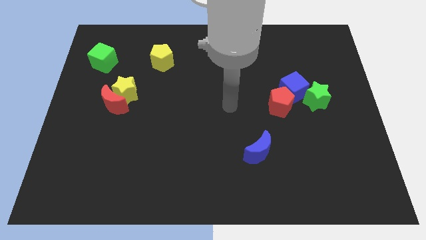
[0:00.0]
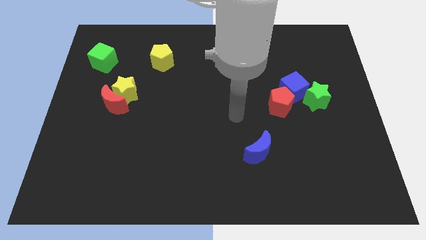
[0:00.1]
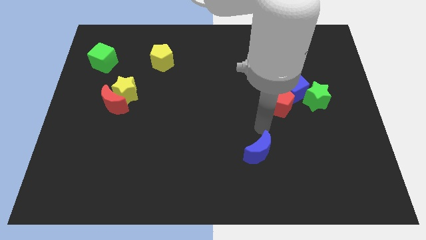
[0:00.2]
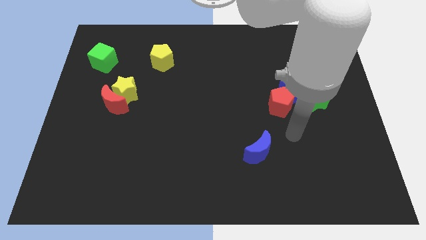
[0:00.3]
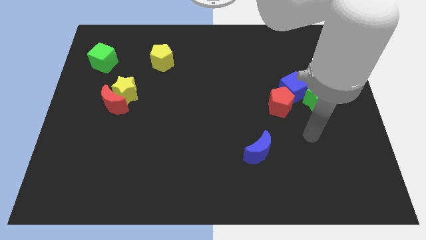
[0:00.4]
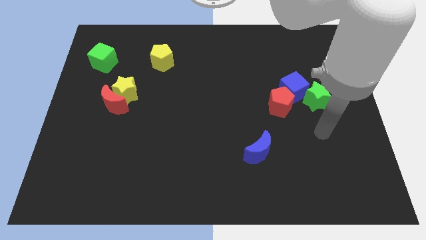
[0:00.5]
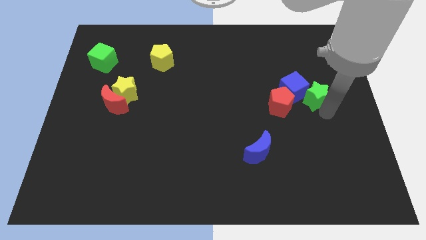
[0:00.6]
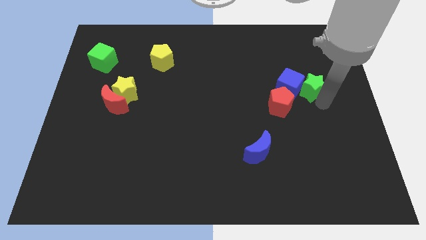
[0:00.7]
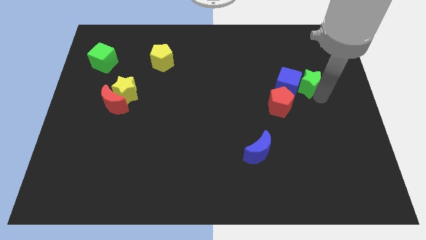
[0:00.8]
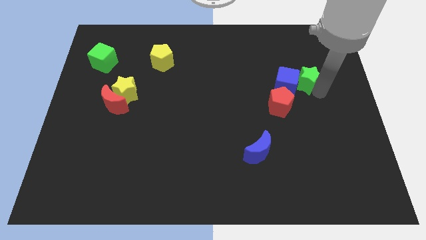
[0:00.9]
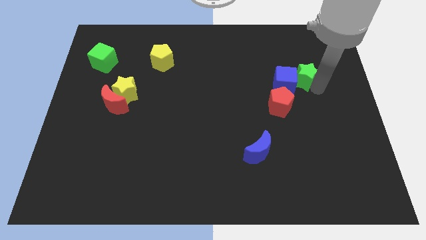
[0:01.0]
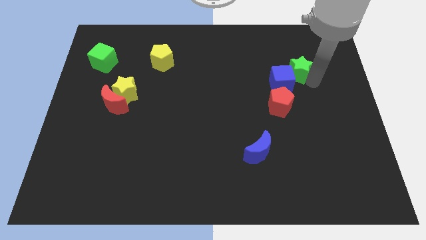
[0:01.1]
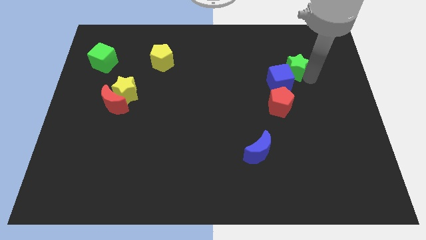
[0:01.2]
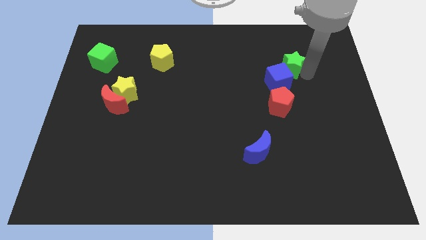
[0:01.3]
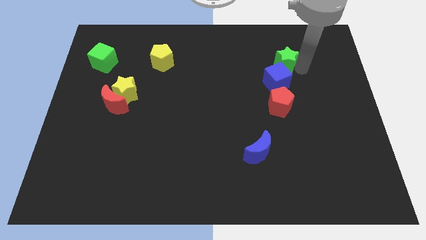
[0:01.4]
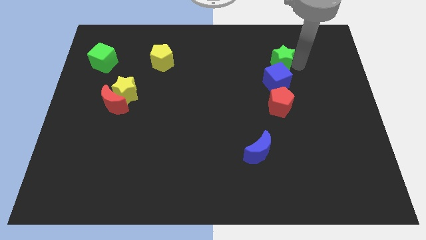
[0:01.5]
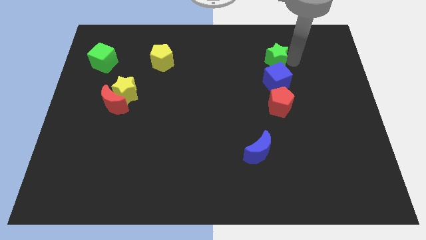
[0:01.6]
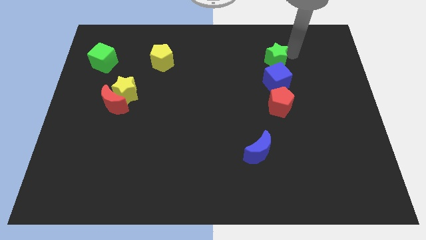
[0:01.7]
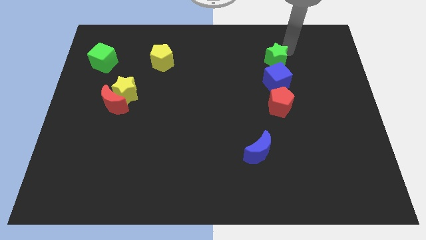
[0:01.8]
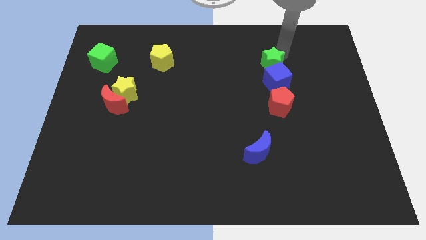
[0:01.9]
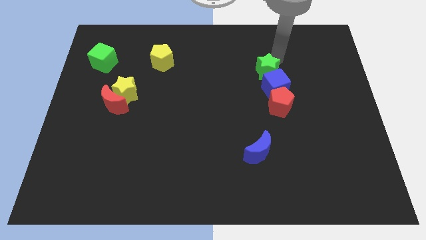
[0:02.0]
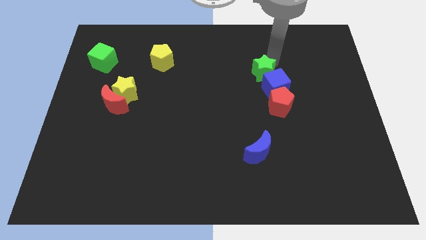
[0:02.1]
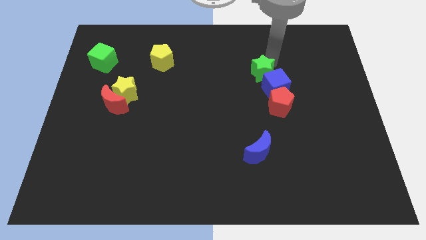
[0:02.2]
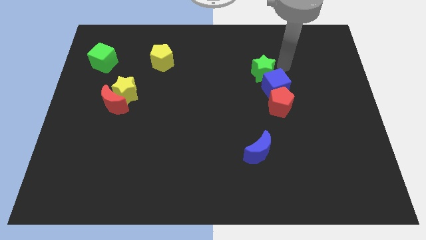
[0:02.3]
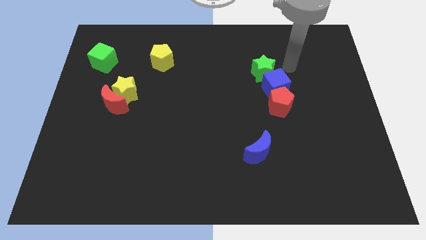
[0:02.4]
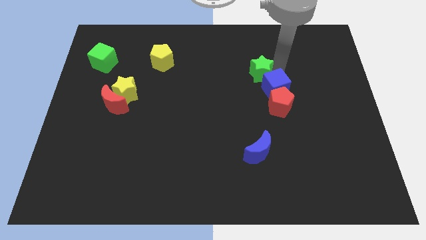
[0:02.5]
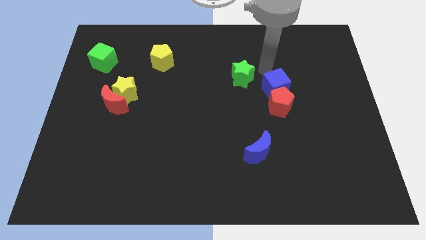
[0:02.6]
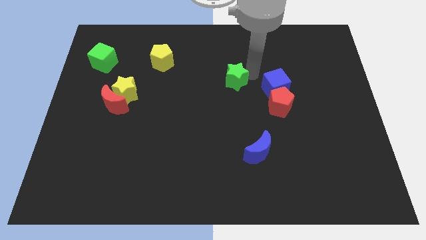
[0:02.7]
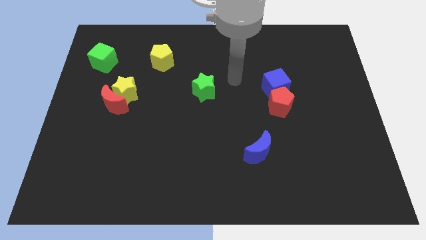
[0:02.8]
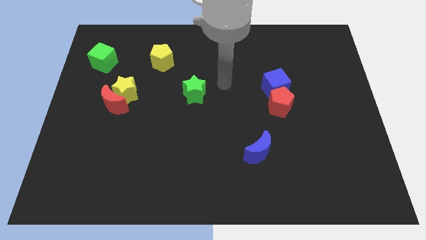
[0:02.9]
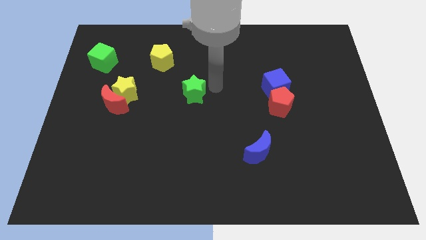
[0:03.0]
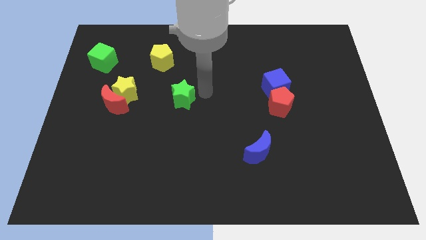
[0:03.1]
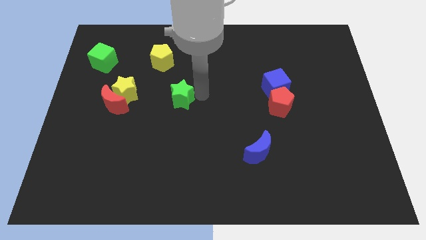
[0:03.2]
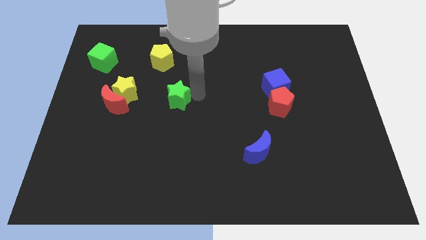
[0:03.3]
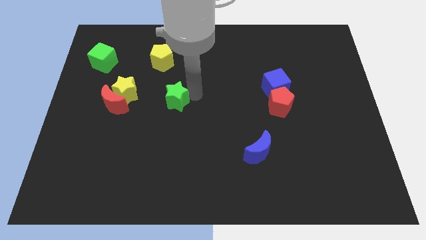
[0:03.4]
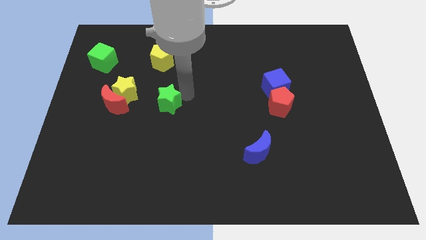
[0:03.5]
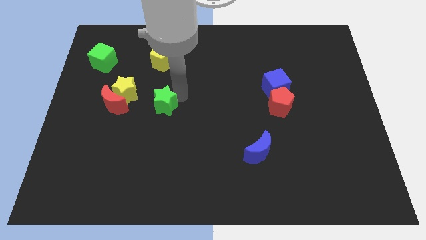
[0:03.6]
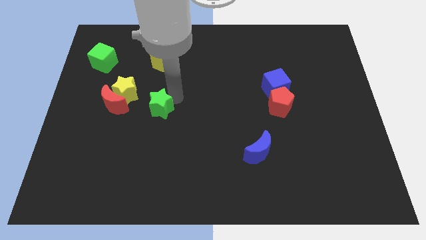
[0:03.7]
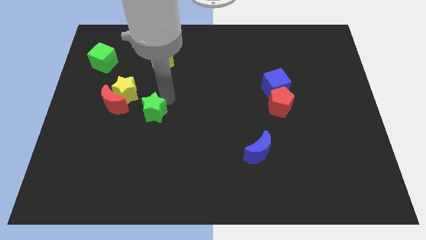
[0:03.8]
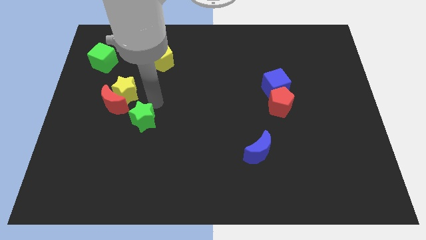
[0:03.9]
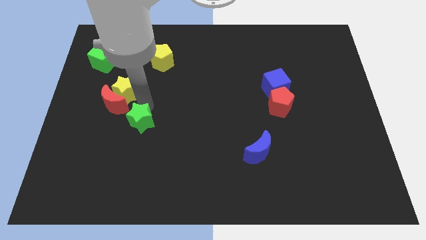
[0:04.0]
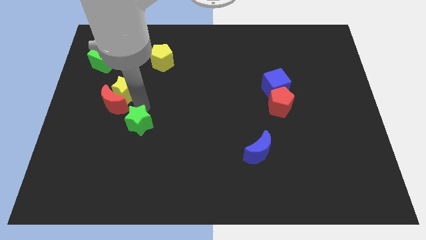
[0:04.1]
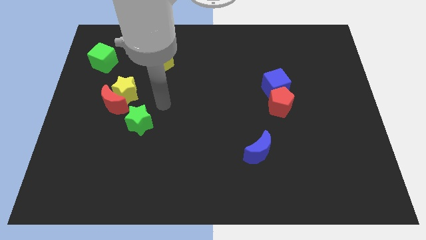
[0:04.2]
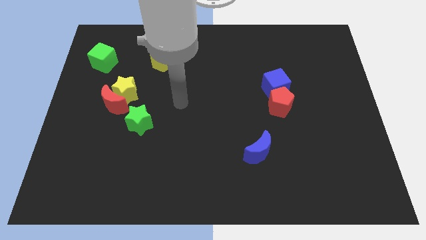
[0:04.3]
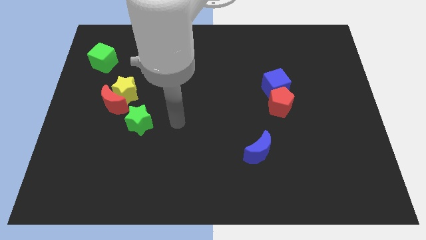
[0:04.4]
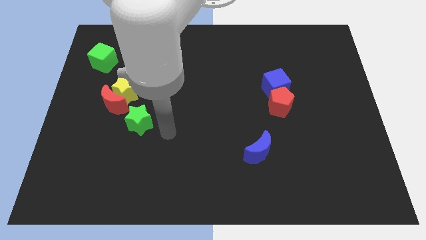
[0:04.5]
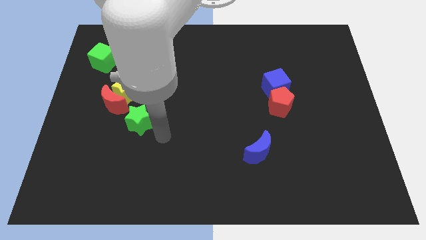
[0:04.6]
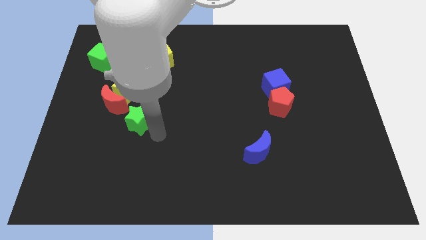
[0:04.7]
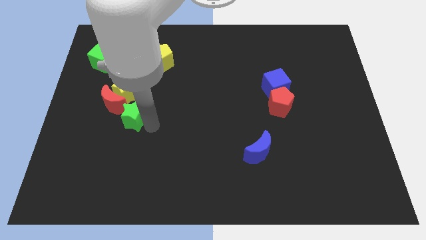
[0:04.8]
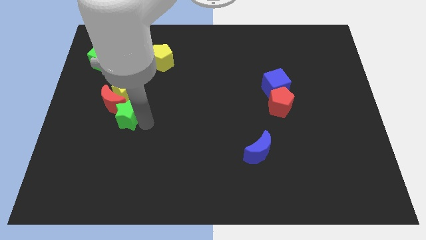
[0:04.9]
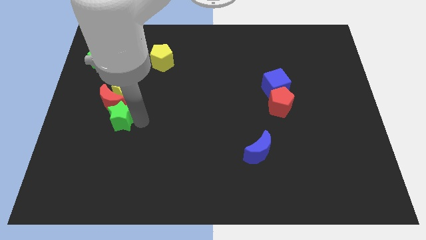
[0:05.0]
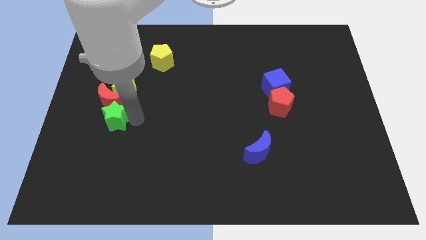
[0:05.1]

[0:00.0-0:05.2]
move the green star next to the red moon

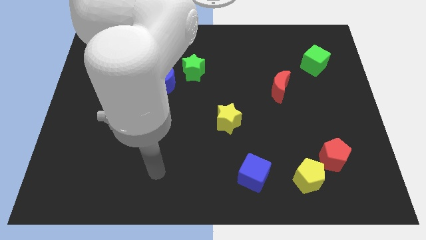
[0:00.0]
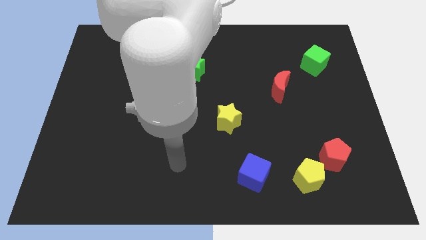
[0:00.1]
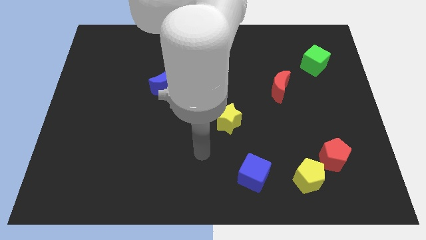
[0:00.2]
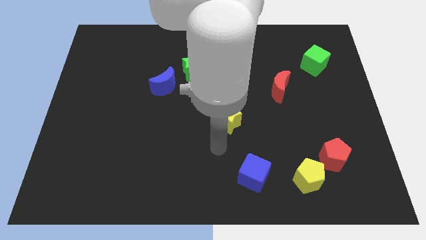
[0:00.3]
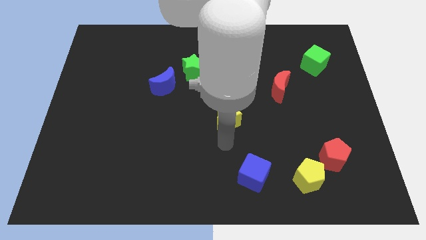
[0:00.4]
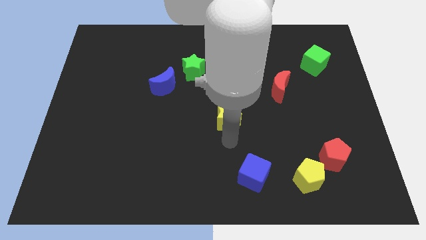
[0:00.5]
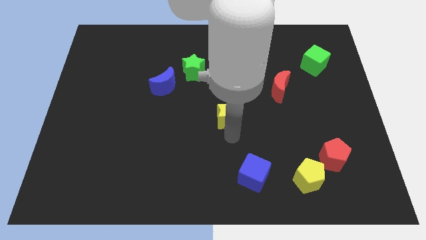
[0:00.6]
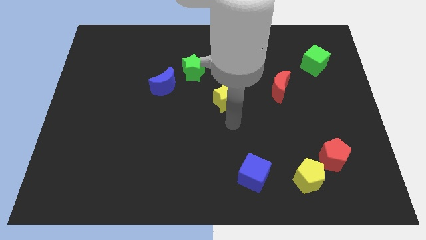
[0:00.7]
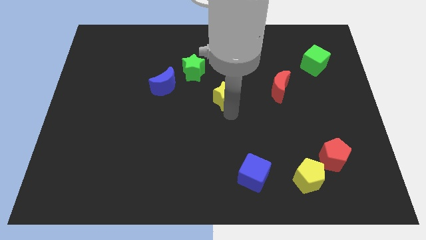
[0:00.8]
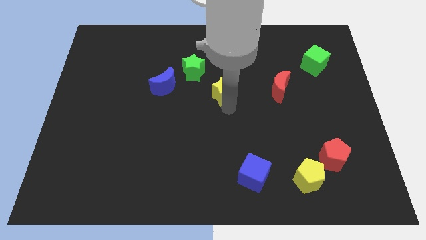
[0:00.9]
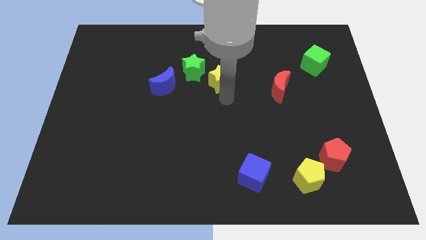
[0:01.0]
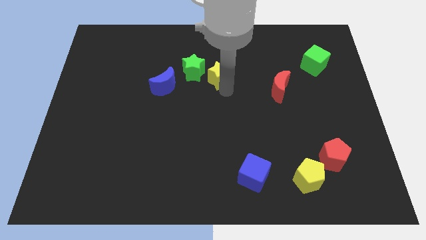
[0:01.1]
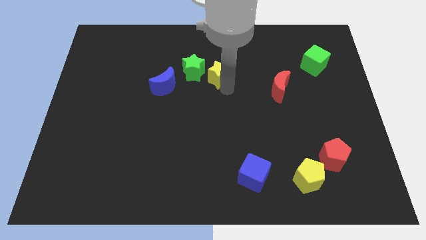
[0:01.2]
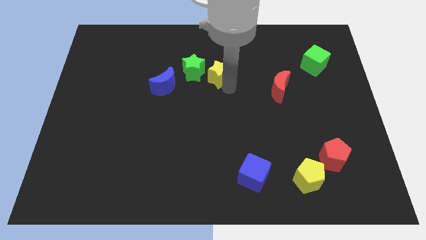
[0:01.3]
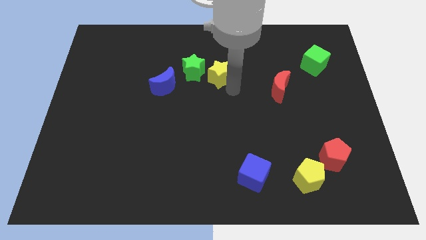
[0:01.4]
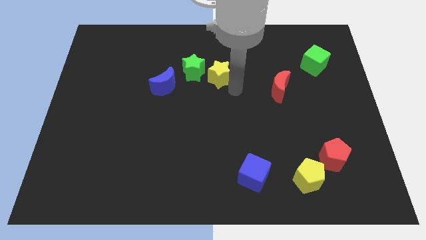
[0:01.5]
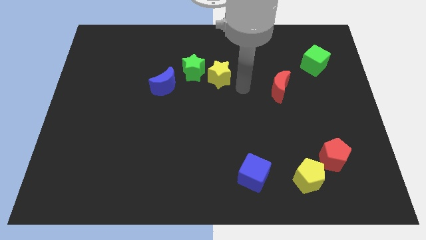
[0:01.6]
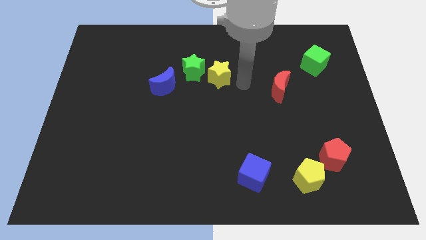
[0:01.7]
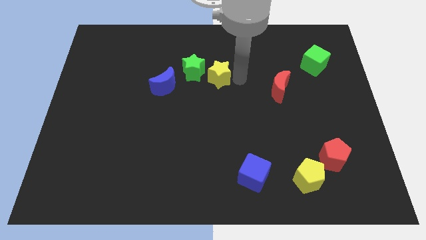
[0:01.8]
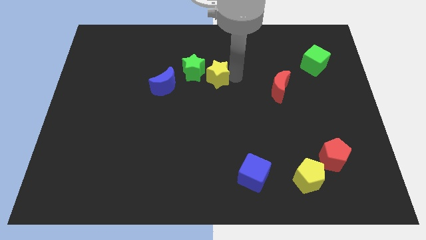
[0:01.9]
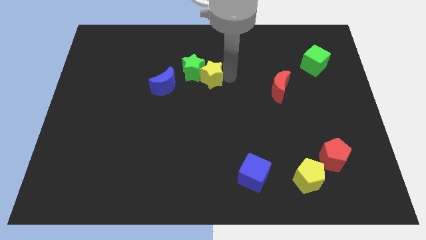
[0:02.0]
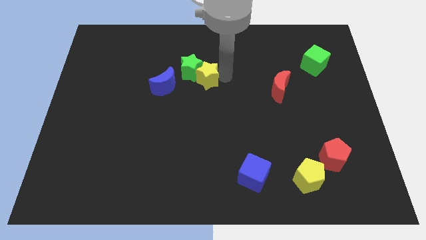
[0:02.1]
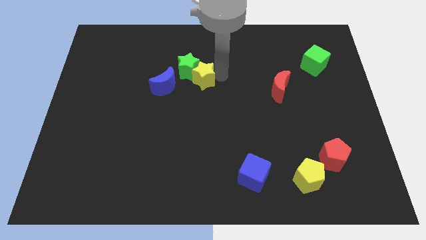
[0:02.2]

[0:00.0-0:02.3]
slide the yellow star next to the green star

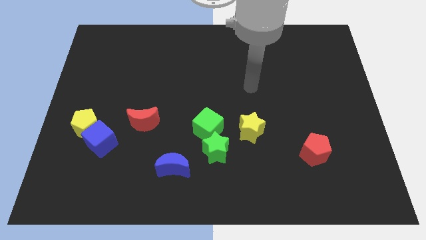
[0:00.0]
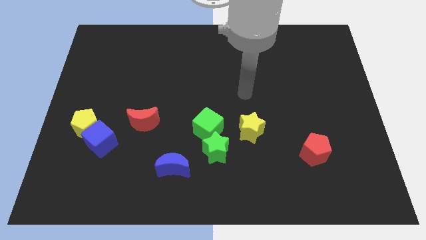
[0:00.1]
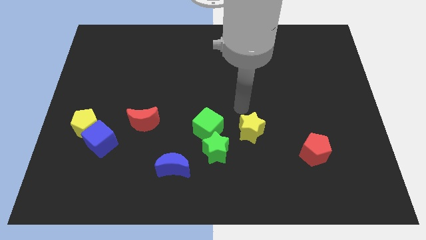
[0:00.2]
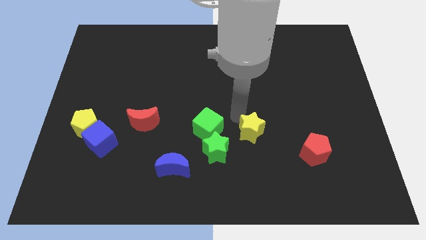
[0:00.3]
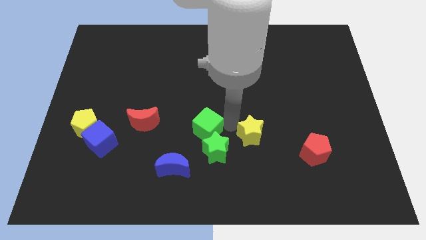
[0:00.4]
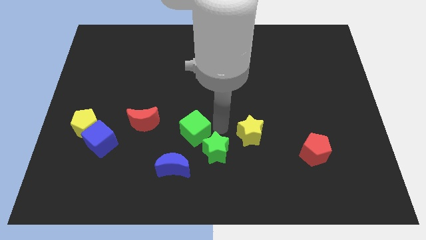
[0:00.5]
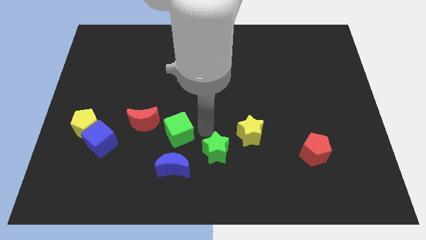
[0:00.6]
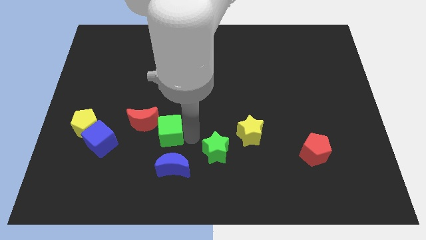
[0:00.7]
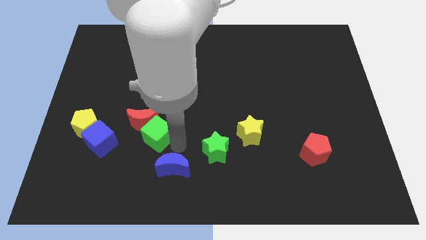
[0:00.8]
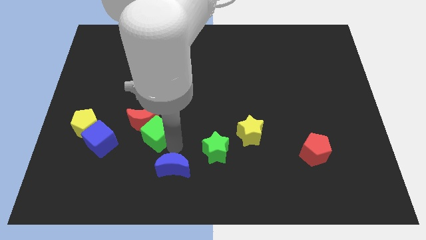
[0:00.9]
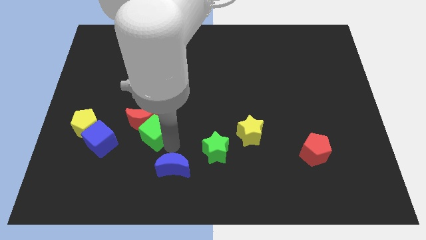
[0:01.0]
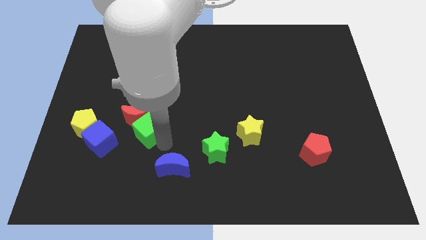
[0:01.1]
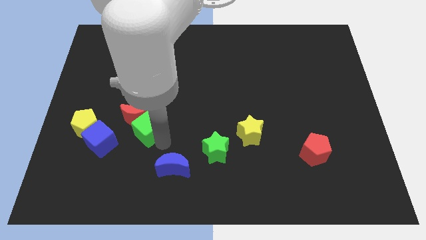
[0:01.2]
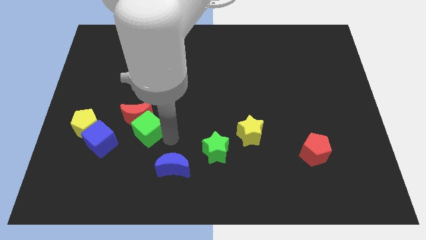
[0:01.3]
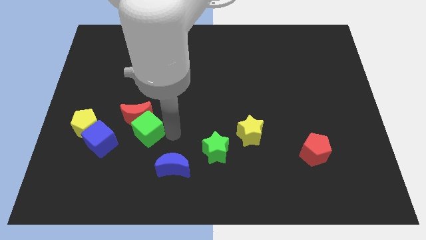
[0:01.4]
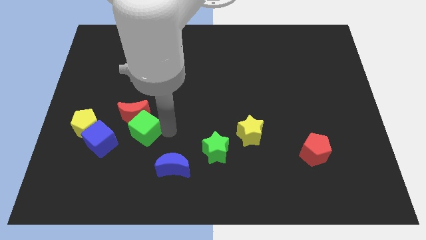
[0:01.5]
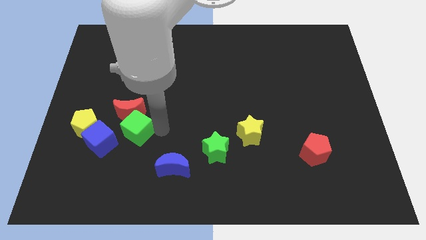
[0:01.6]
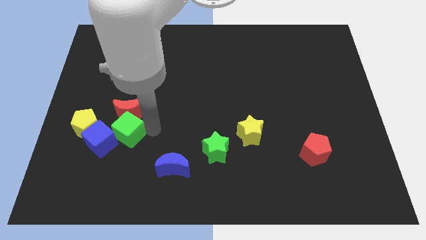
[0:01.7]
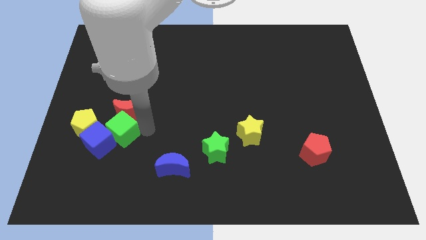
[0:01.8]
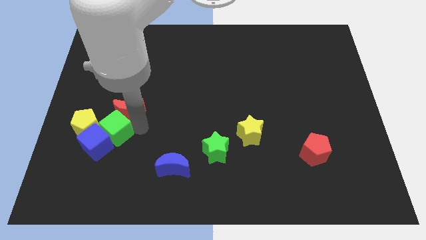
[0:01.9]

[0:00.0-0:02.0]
move the green cube towards the blue cube
